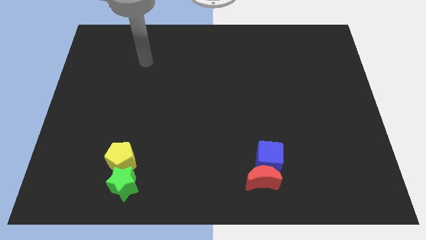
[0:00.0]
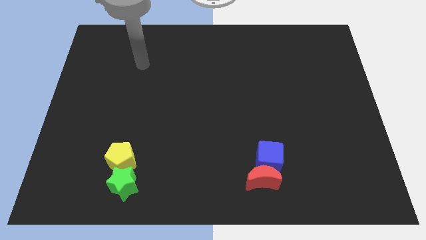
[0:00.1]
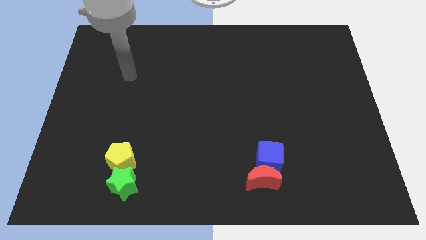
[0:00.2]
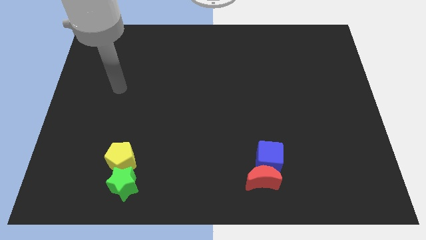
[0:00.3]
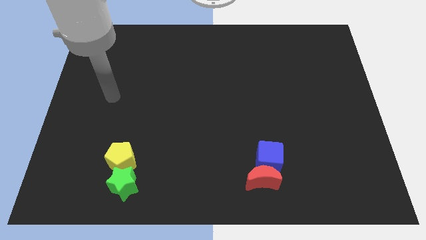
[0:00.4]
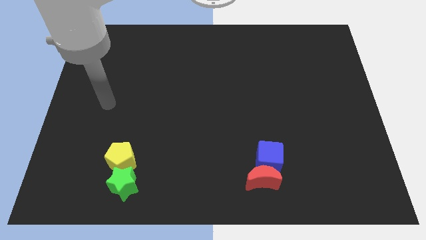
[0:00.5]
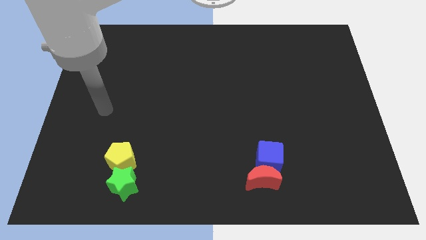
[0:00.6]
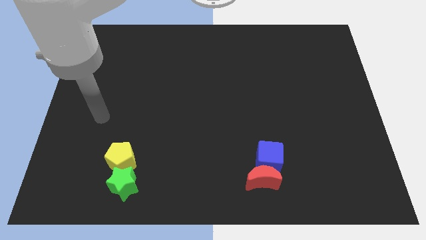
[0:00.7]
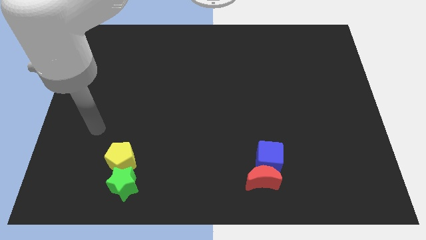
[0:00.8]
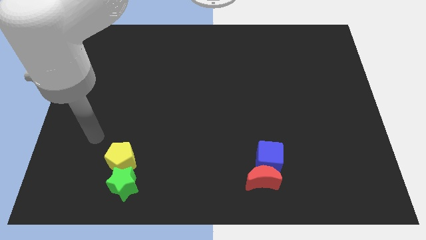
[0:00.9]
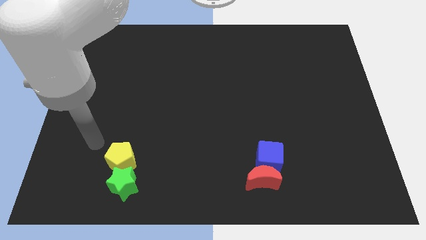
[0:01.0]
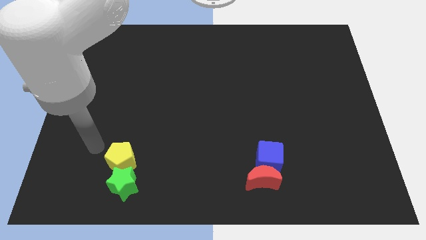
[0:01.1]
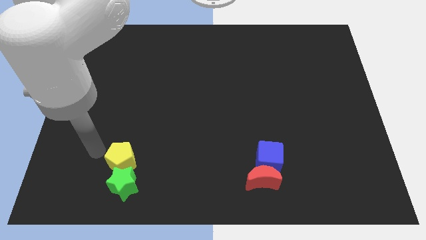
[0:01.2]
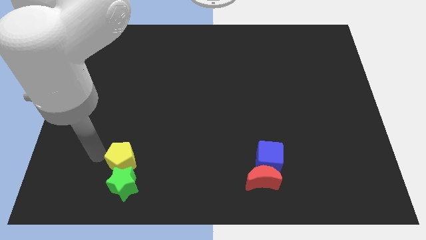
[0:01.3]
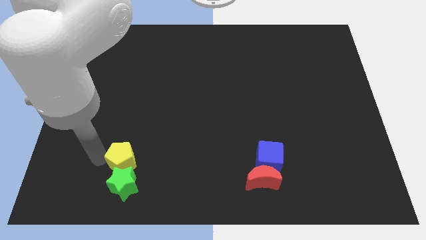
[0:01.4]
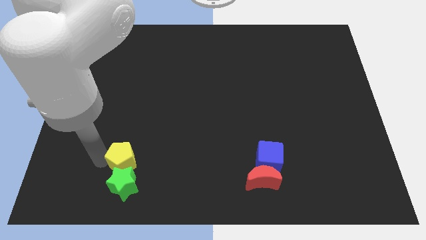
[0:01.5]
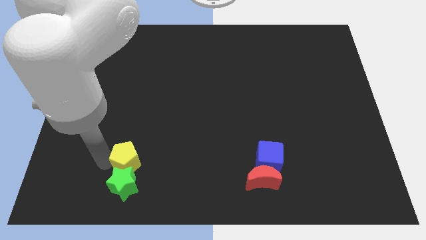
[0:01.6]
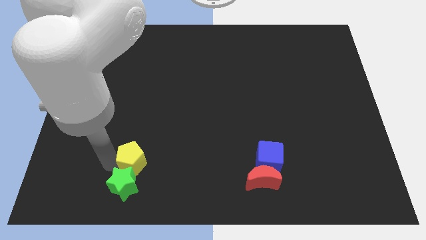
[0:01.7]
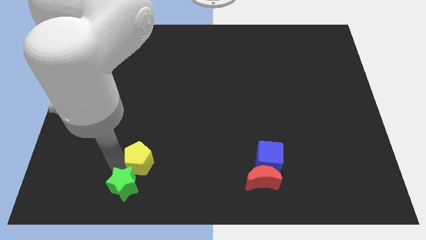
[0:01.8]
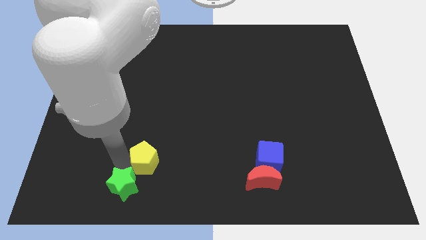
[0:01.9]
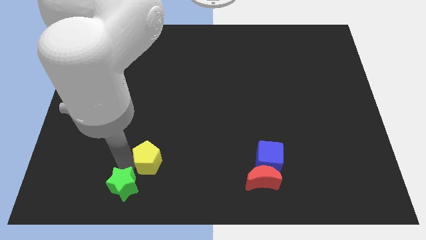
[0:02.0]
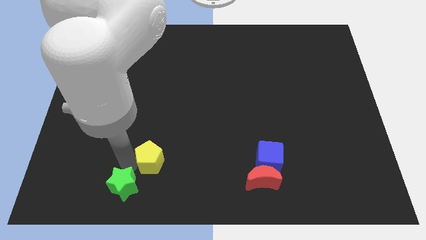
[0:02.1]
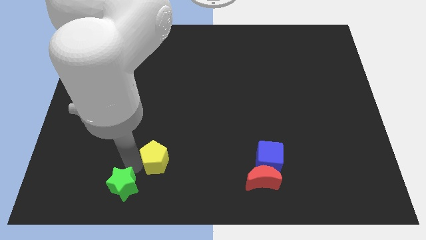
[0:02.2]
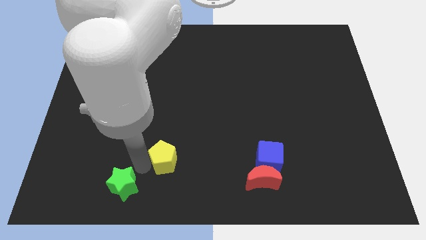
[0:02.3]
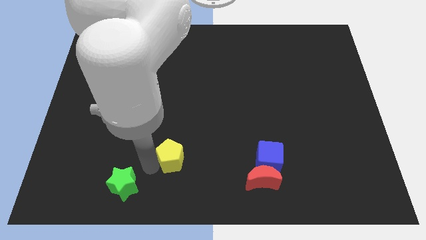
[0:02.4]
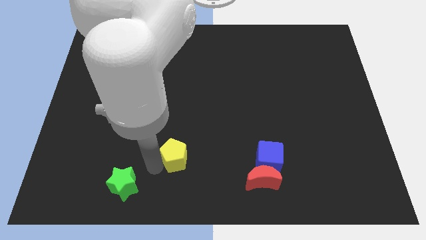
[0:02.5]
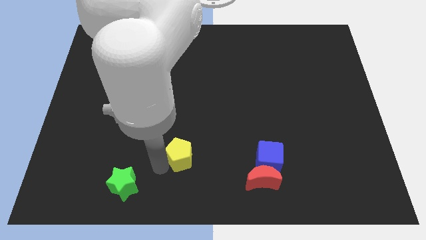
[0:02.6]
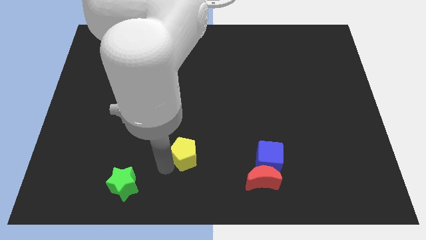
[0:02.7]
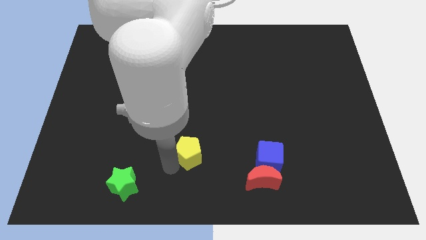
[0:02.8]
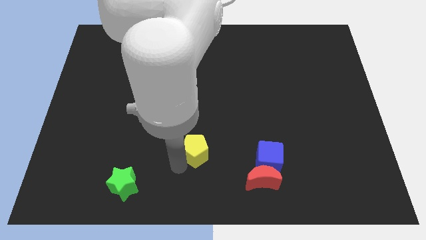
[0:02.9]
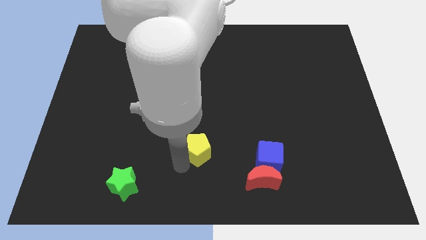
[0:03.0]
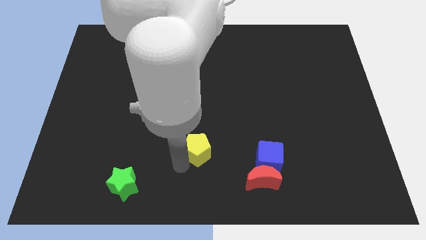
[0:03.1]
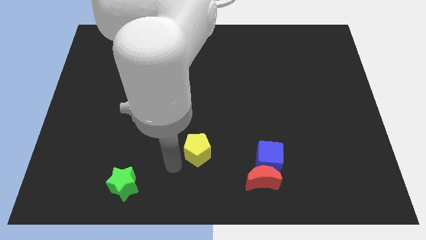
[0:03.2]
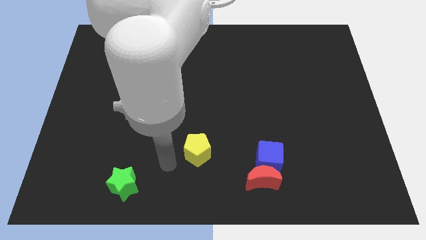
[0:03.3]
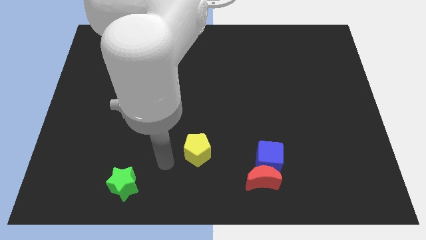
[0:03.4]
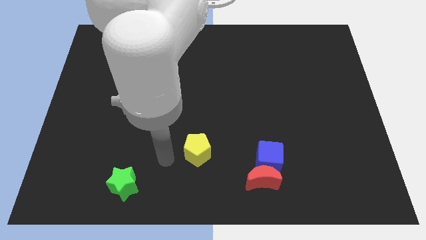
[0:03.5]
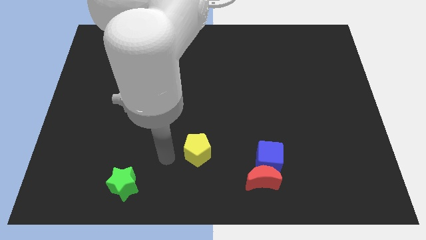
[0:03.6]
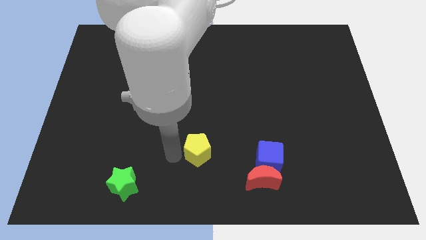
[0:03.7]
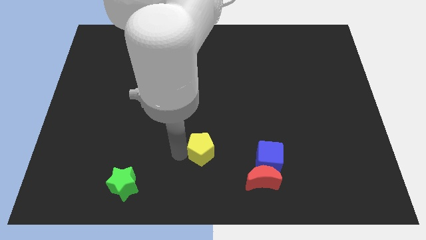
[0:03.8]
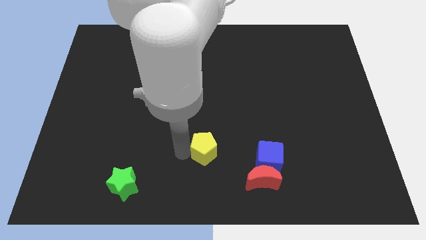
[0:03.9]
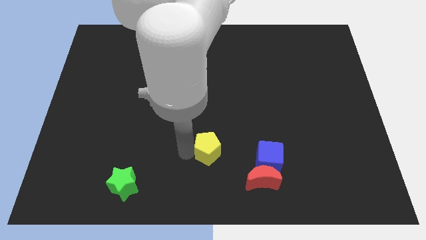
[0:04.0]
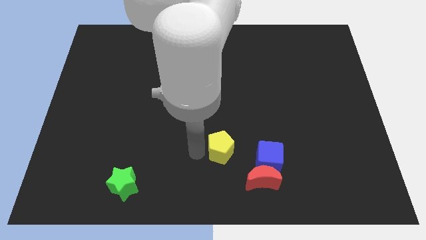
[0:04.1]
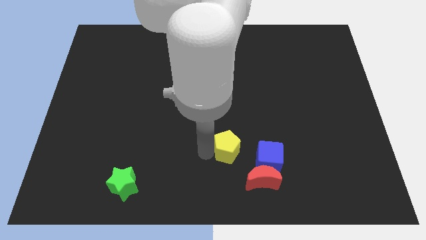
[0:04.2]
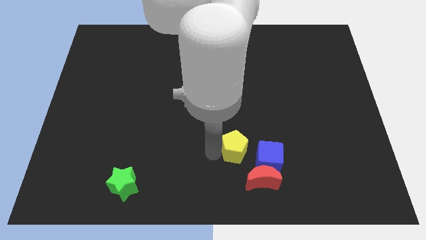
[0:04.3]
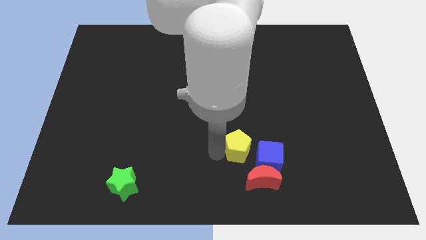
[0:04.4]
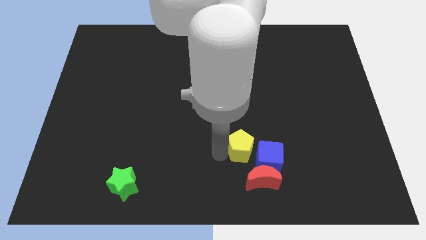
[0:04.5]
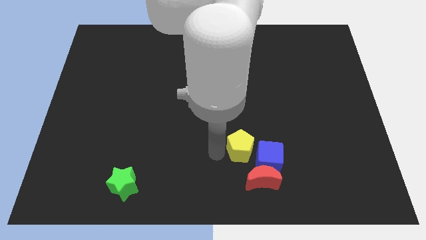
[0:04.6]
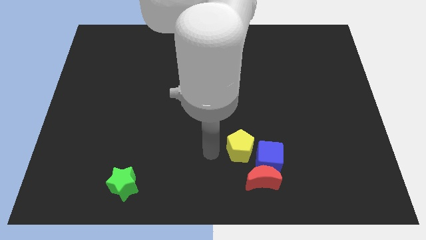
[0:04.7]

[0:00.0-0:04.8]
move the yellow block close to the cube

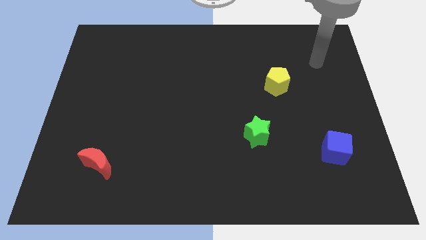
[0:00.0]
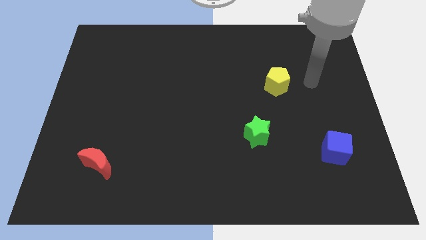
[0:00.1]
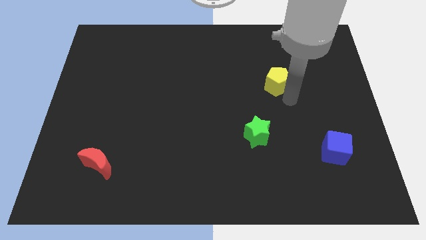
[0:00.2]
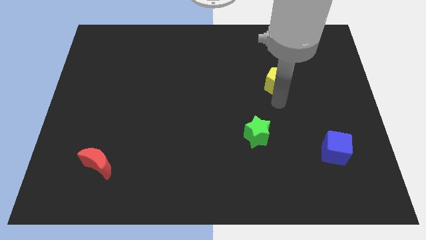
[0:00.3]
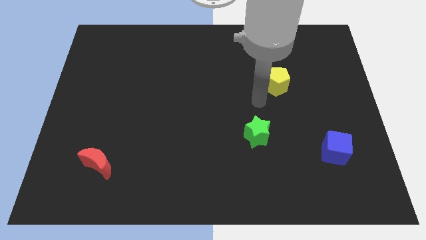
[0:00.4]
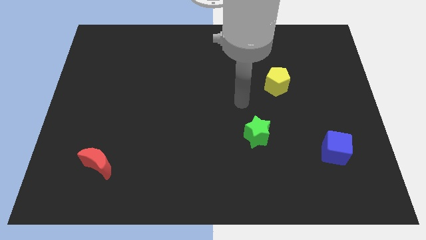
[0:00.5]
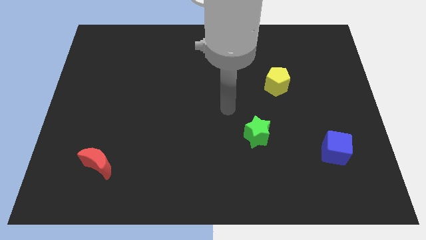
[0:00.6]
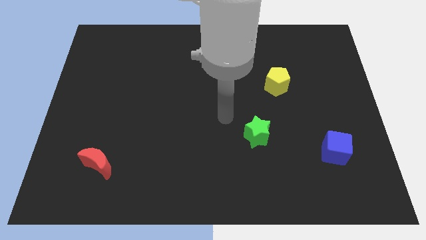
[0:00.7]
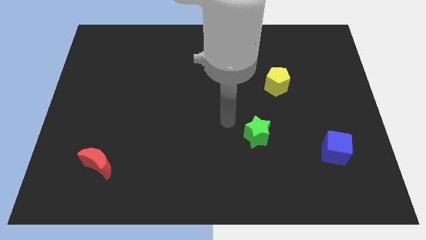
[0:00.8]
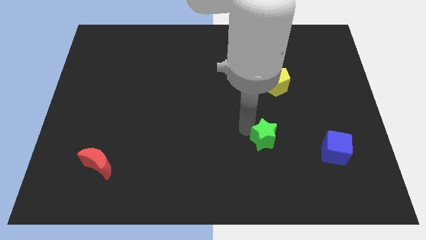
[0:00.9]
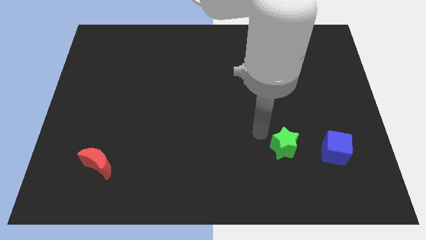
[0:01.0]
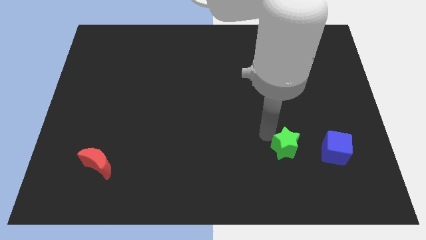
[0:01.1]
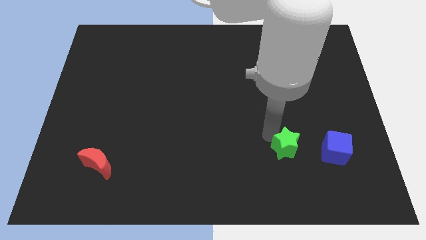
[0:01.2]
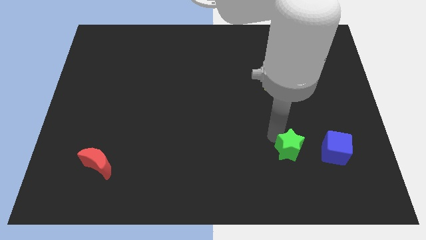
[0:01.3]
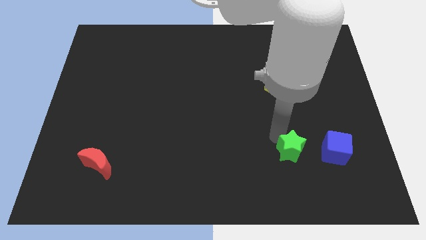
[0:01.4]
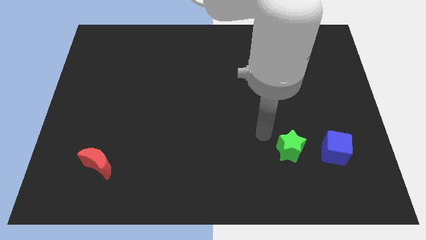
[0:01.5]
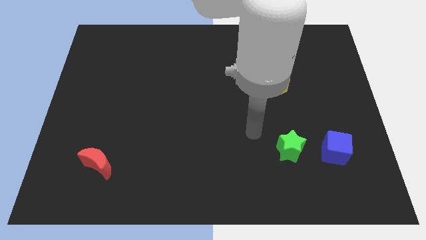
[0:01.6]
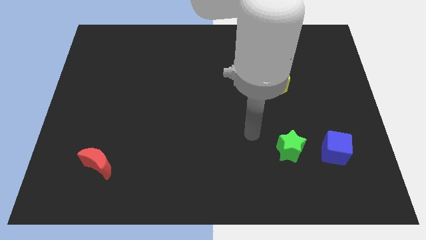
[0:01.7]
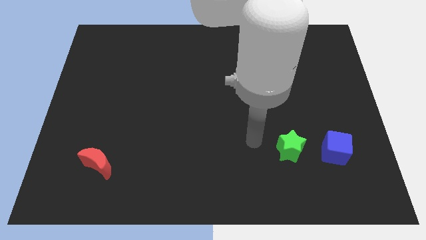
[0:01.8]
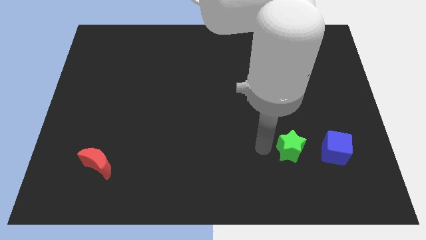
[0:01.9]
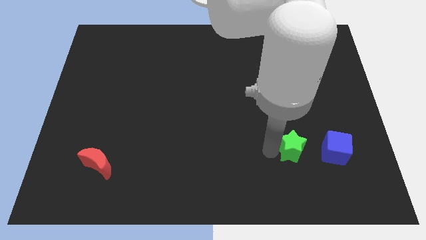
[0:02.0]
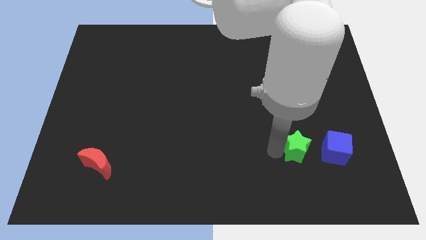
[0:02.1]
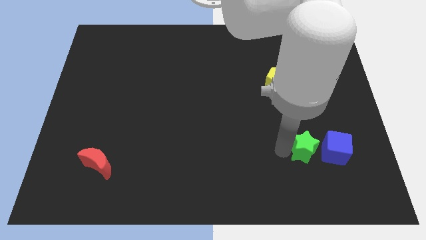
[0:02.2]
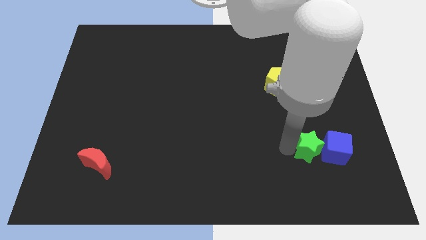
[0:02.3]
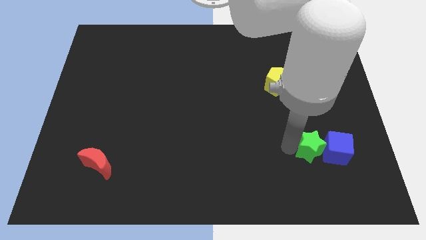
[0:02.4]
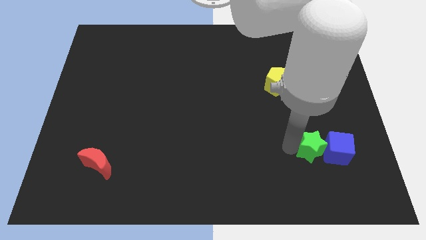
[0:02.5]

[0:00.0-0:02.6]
slide the green block to the blue block

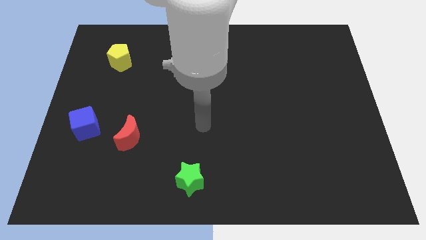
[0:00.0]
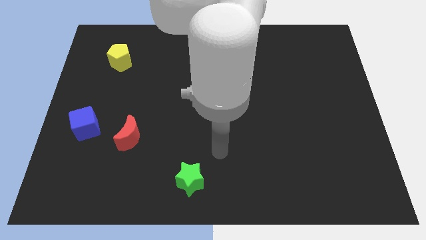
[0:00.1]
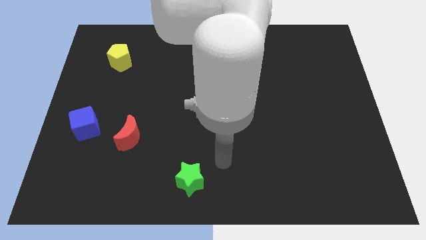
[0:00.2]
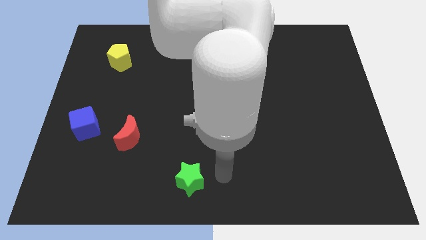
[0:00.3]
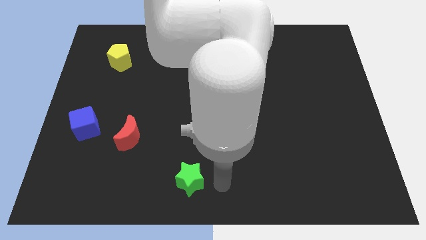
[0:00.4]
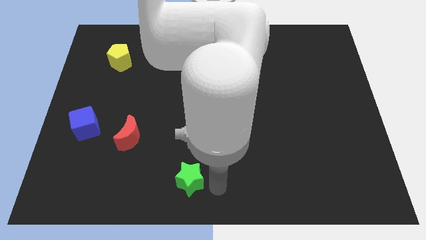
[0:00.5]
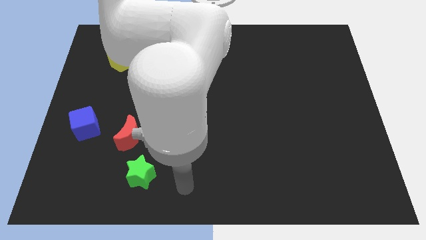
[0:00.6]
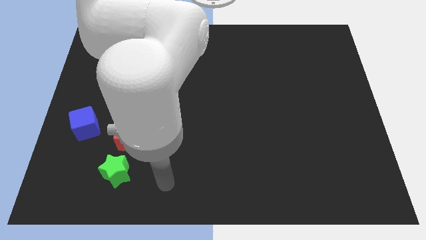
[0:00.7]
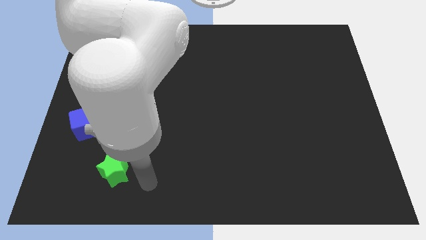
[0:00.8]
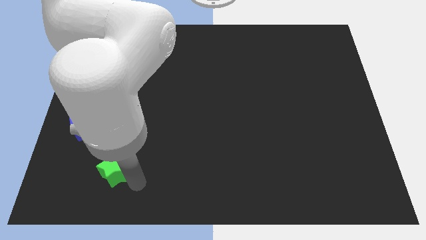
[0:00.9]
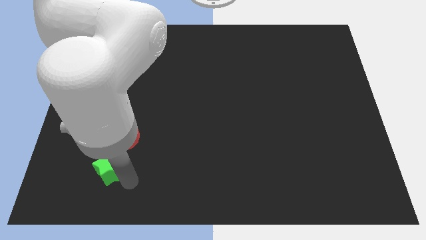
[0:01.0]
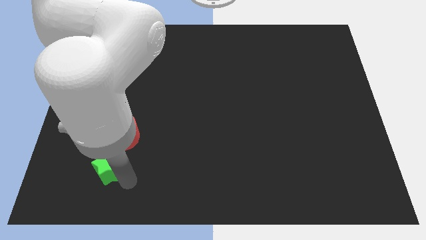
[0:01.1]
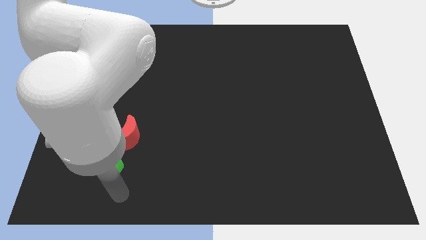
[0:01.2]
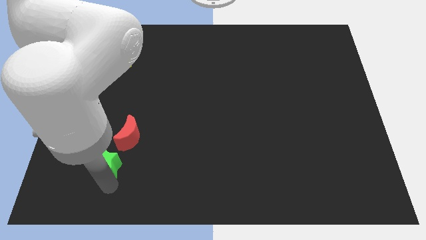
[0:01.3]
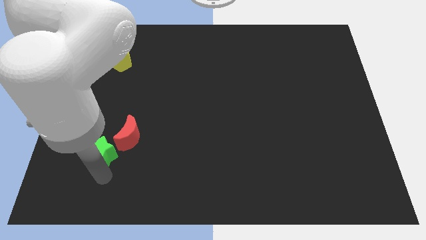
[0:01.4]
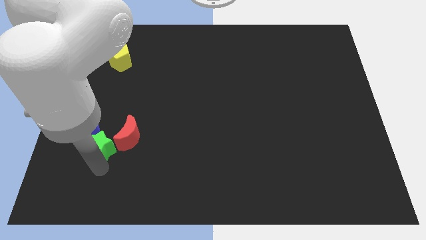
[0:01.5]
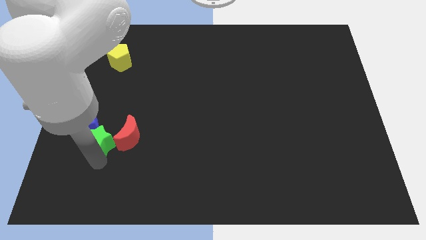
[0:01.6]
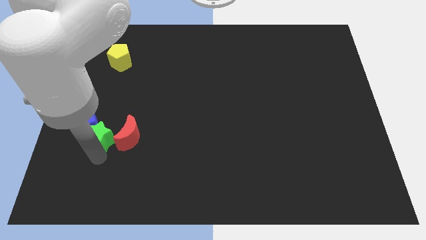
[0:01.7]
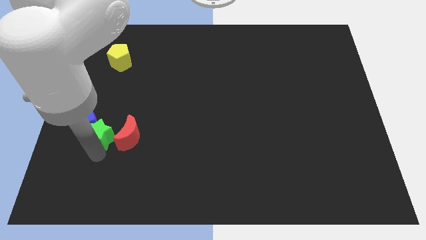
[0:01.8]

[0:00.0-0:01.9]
push the star next to the blue cube
